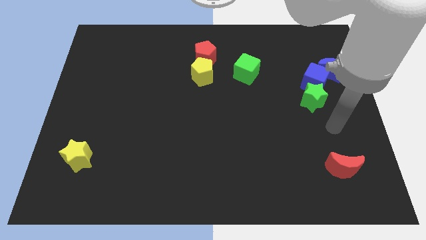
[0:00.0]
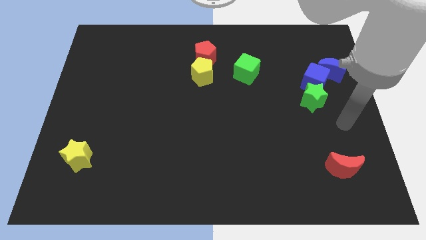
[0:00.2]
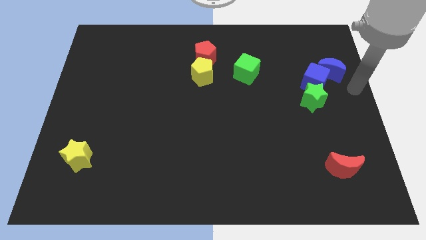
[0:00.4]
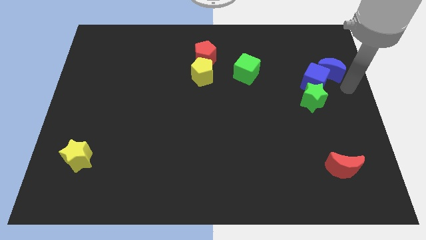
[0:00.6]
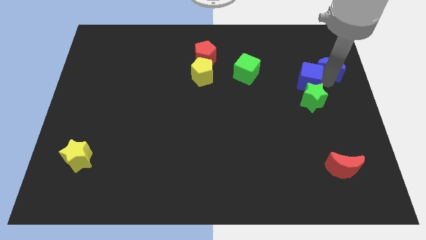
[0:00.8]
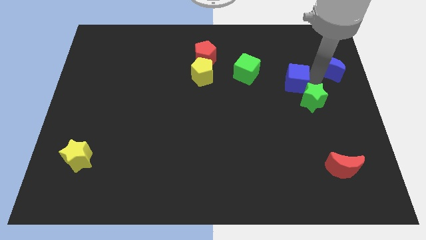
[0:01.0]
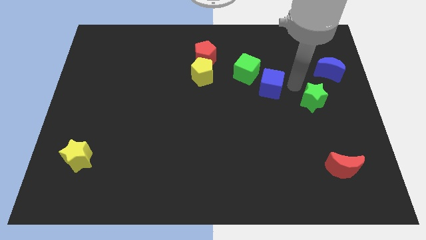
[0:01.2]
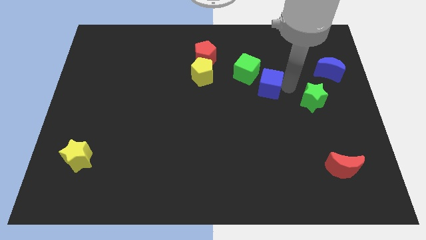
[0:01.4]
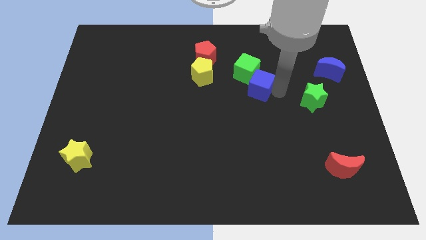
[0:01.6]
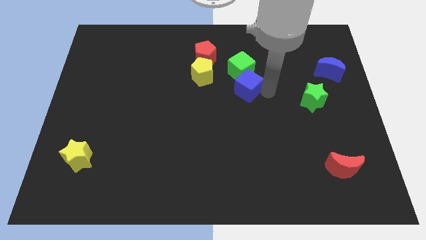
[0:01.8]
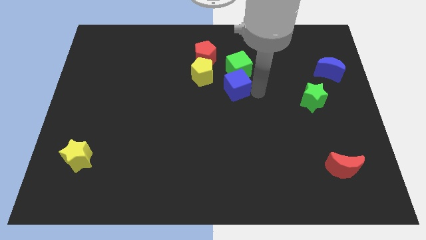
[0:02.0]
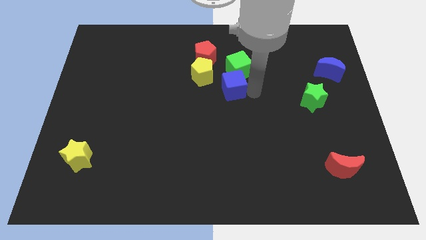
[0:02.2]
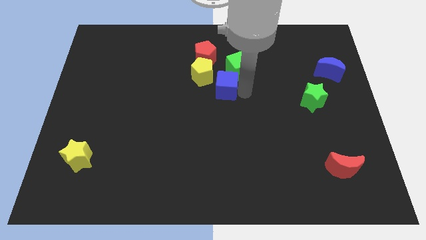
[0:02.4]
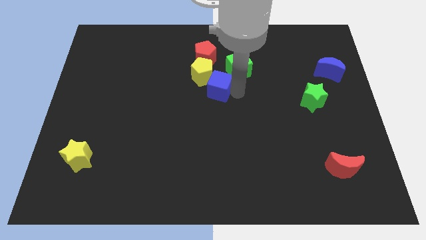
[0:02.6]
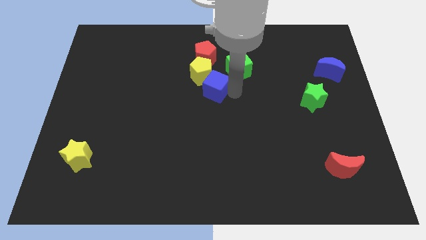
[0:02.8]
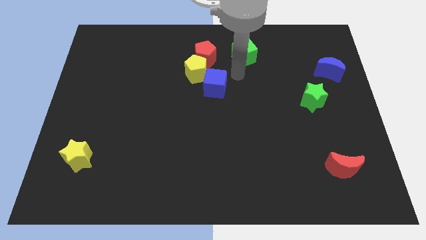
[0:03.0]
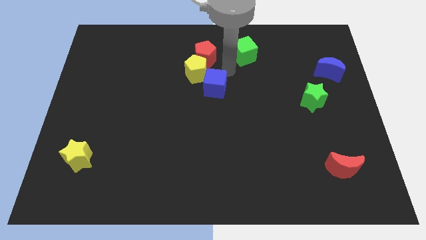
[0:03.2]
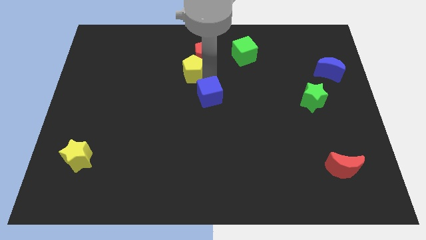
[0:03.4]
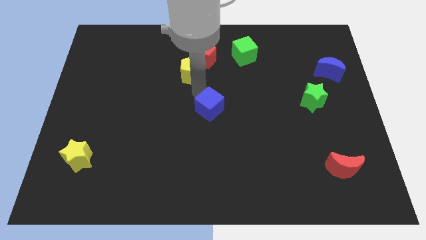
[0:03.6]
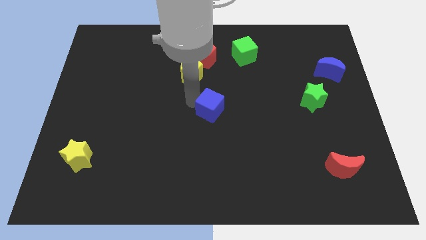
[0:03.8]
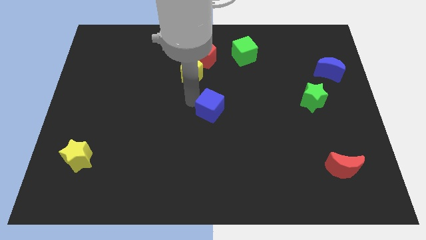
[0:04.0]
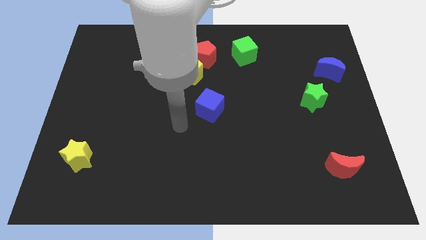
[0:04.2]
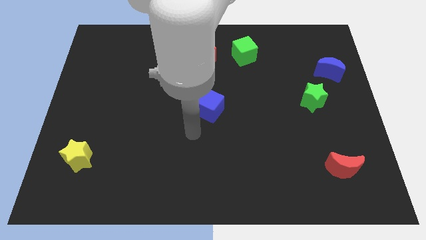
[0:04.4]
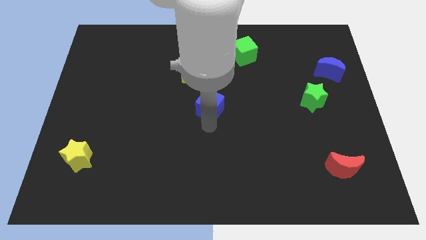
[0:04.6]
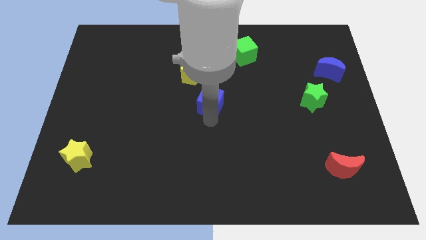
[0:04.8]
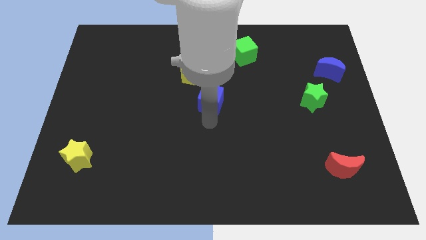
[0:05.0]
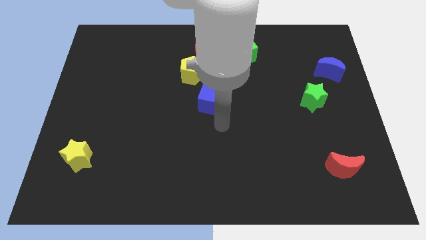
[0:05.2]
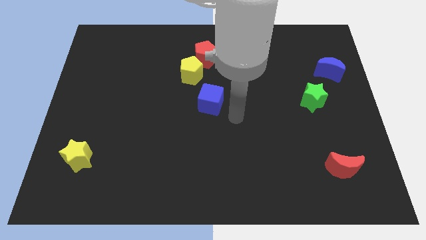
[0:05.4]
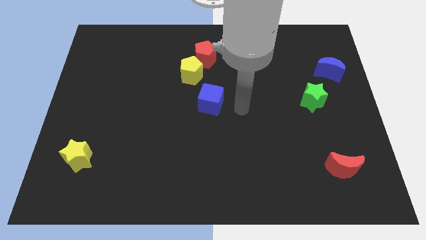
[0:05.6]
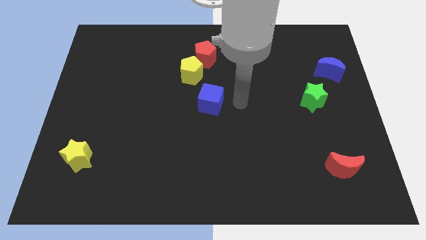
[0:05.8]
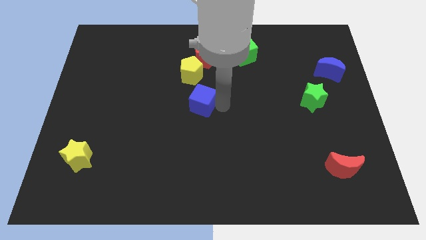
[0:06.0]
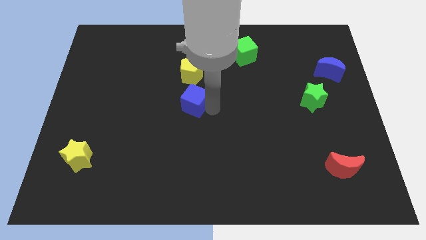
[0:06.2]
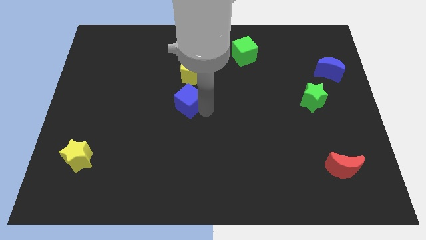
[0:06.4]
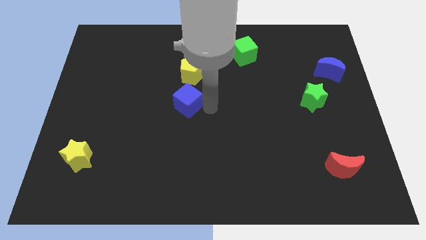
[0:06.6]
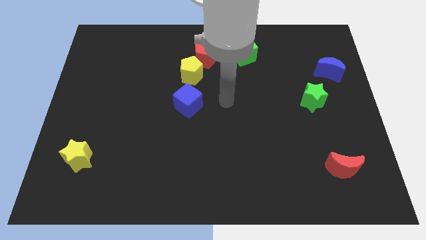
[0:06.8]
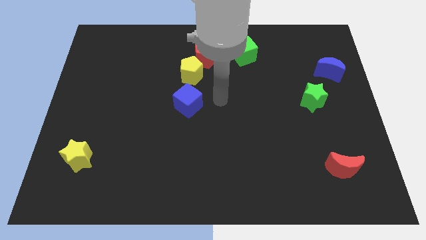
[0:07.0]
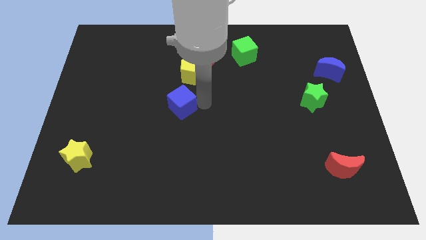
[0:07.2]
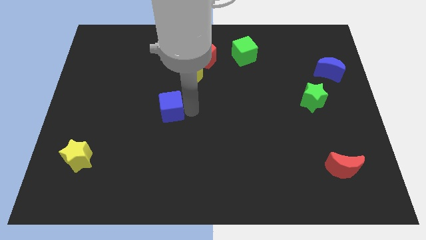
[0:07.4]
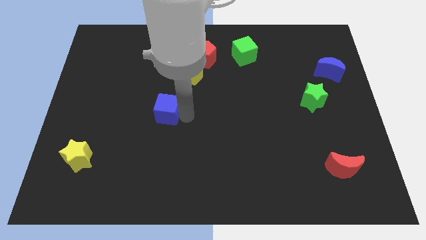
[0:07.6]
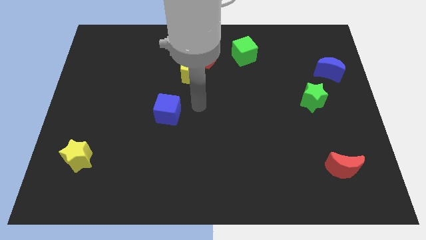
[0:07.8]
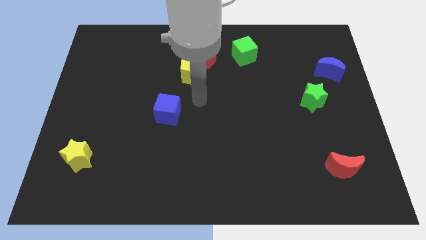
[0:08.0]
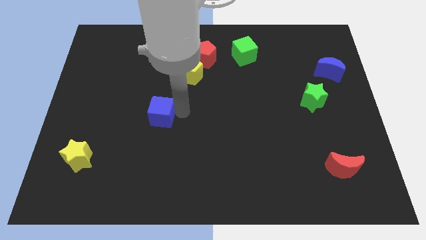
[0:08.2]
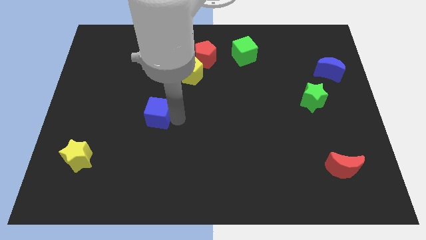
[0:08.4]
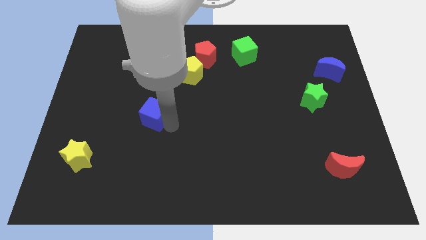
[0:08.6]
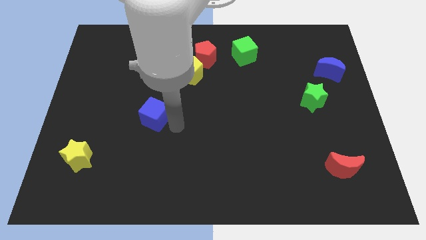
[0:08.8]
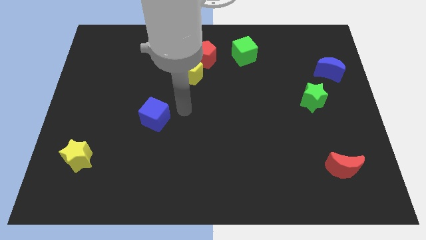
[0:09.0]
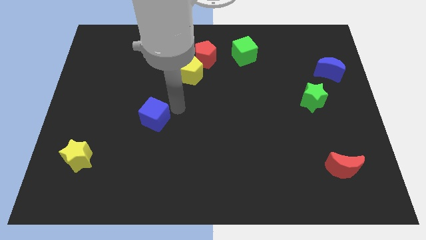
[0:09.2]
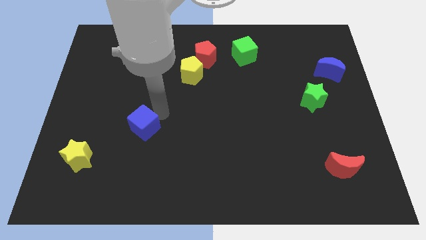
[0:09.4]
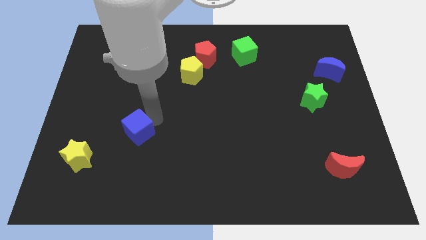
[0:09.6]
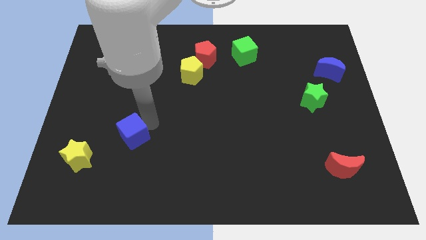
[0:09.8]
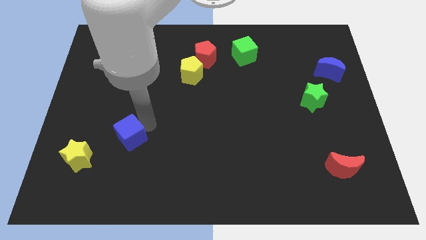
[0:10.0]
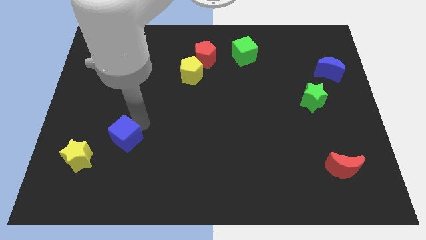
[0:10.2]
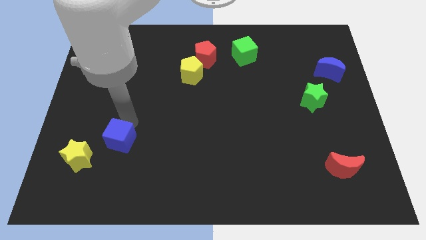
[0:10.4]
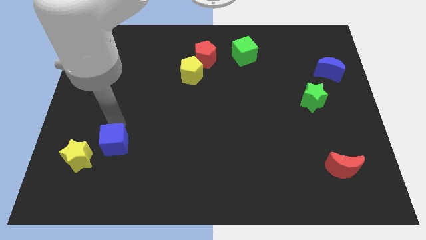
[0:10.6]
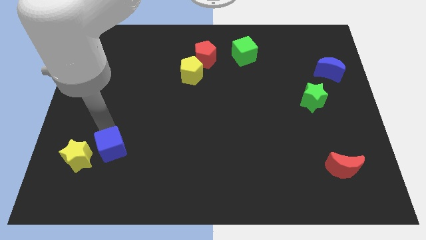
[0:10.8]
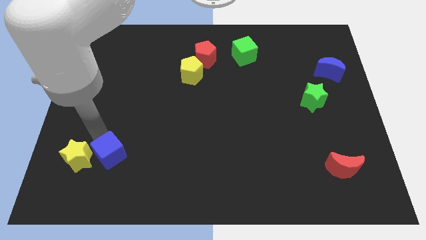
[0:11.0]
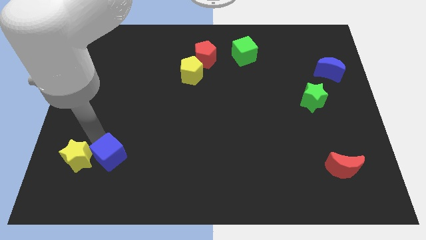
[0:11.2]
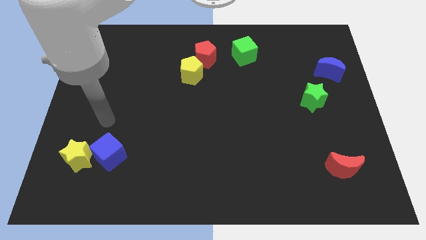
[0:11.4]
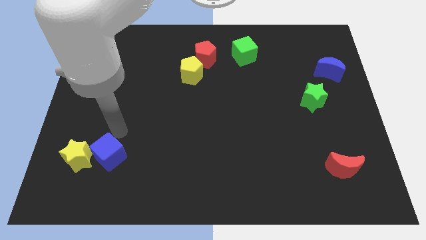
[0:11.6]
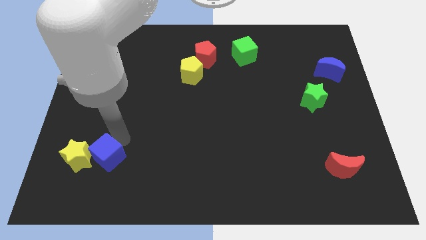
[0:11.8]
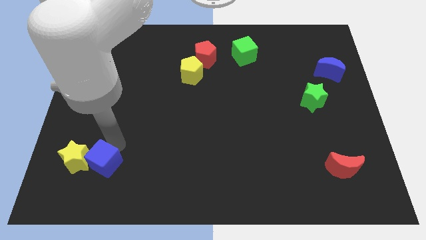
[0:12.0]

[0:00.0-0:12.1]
put the blue cube next to the yellow star

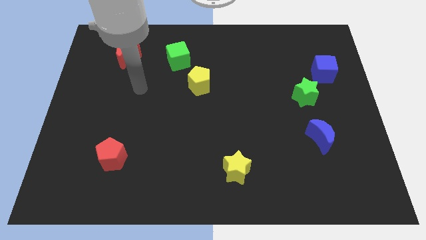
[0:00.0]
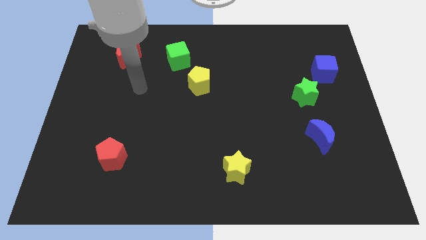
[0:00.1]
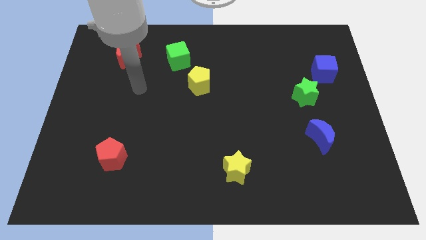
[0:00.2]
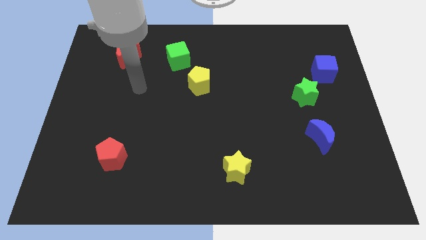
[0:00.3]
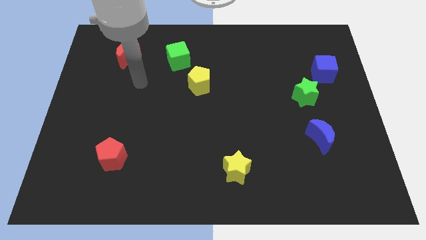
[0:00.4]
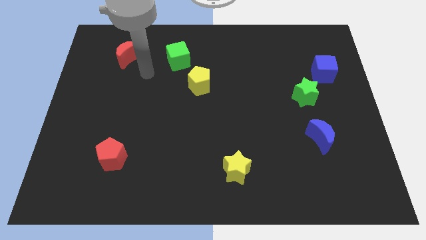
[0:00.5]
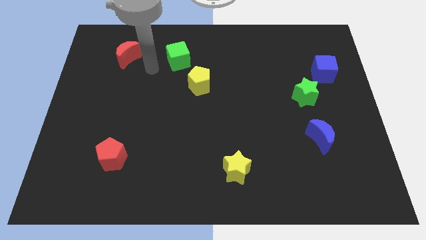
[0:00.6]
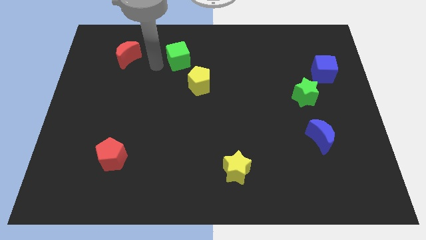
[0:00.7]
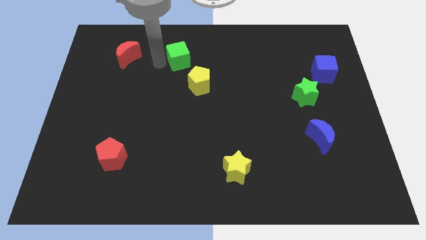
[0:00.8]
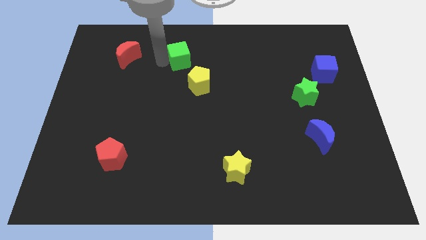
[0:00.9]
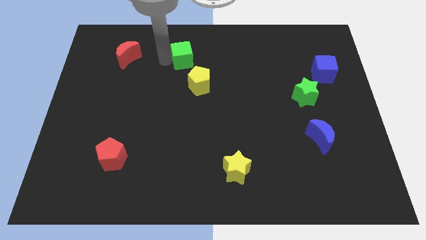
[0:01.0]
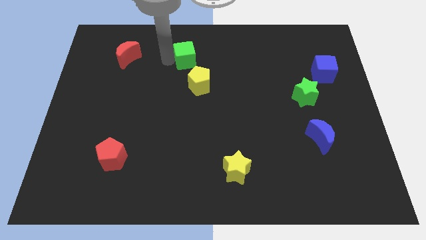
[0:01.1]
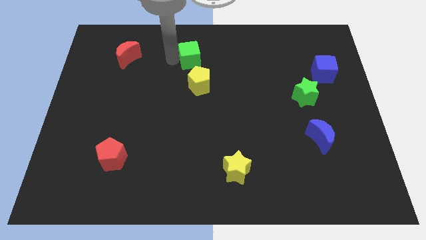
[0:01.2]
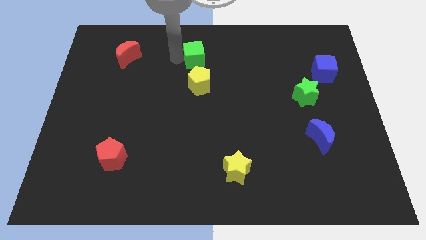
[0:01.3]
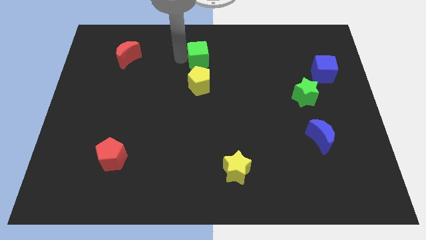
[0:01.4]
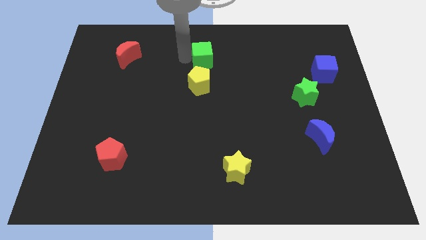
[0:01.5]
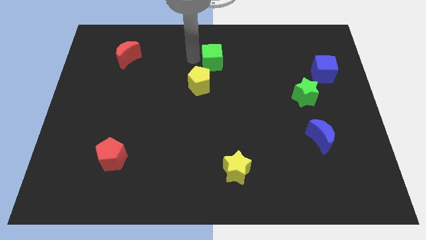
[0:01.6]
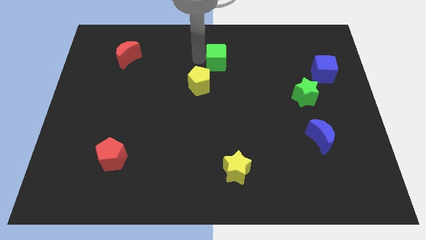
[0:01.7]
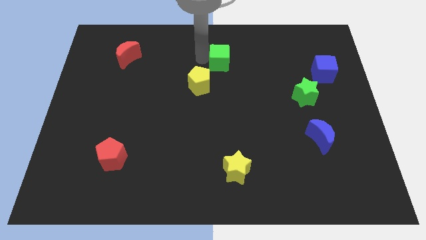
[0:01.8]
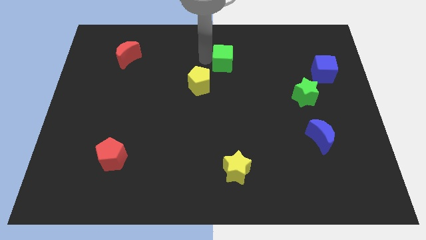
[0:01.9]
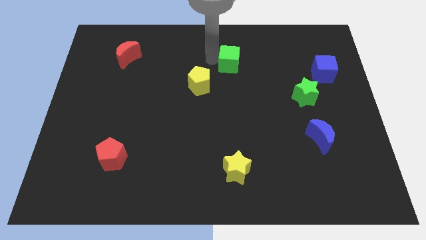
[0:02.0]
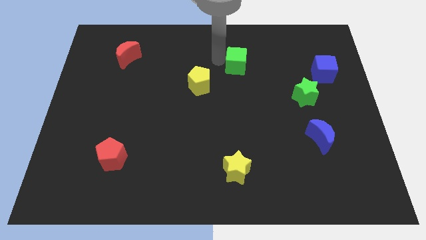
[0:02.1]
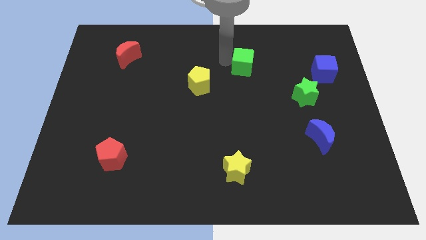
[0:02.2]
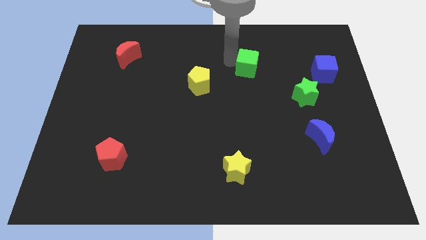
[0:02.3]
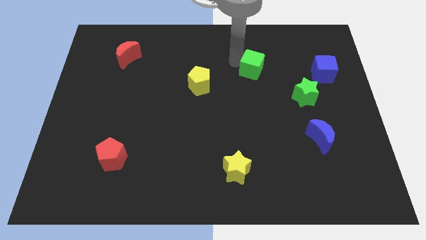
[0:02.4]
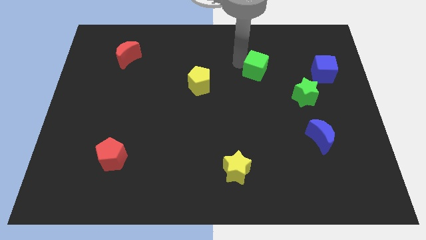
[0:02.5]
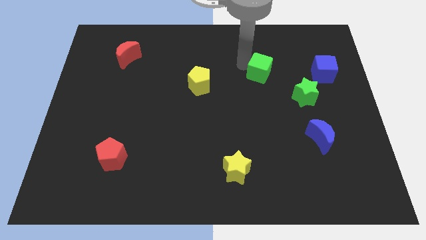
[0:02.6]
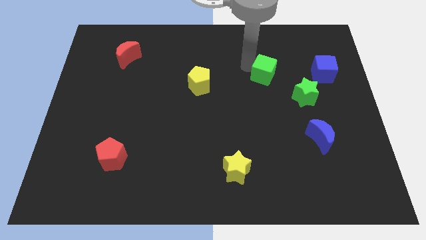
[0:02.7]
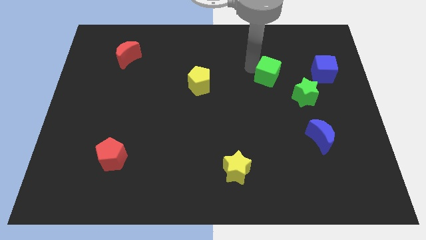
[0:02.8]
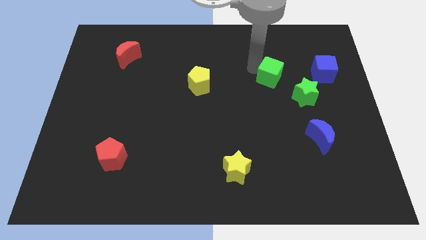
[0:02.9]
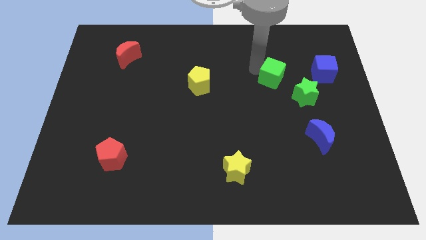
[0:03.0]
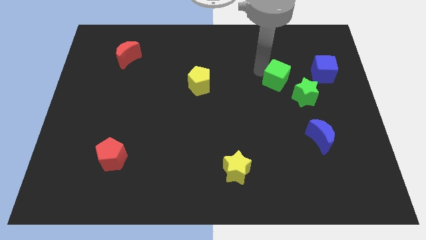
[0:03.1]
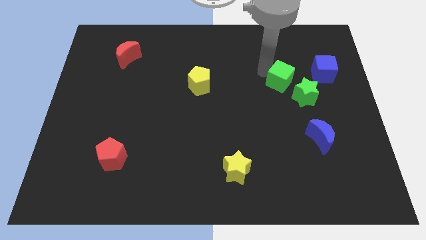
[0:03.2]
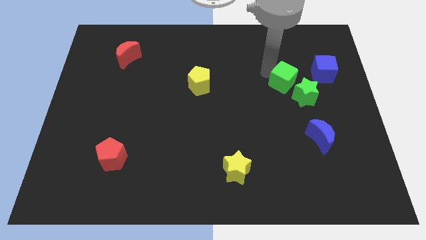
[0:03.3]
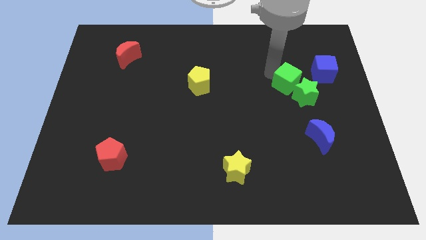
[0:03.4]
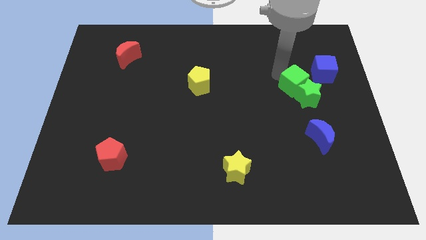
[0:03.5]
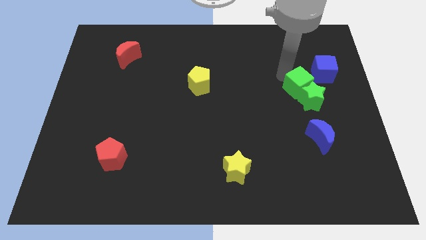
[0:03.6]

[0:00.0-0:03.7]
slide the green cube close to the green star
